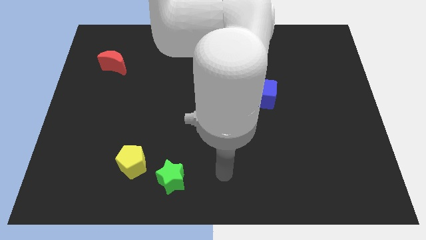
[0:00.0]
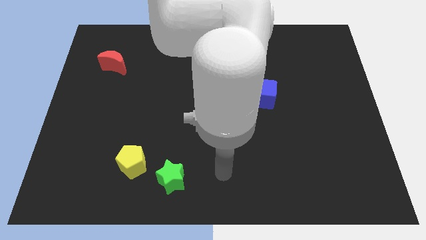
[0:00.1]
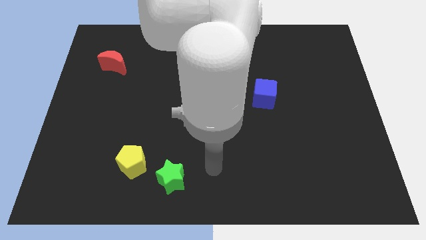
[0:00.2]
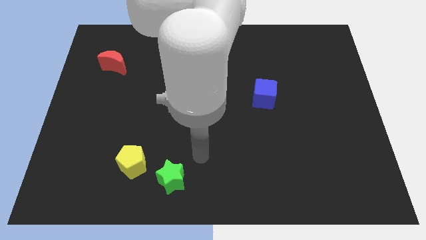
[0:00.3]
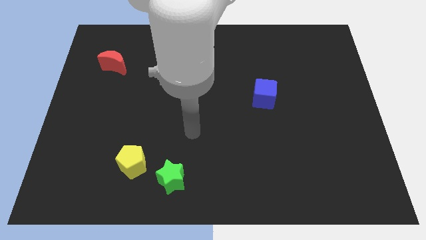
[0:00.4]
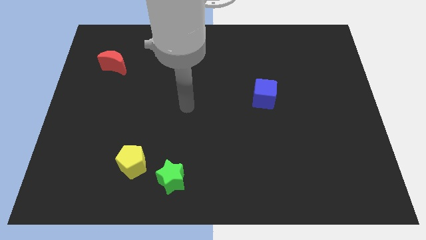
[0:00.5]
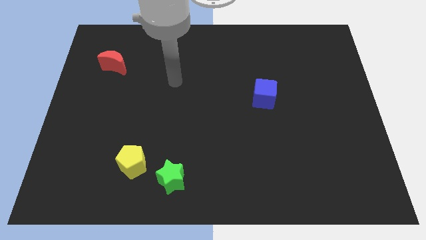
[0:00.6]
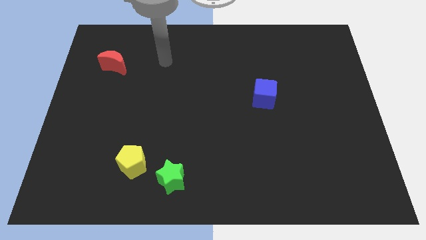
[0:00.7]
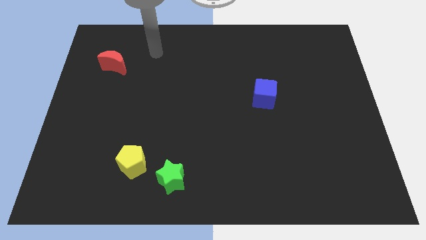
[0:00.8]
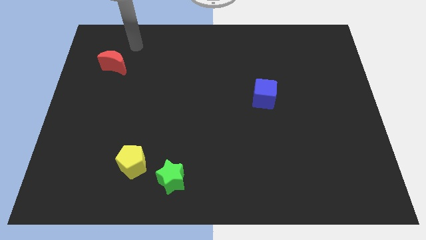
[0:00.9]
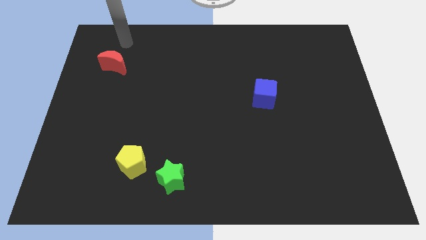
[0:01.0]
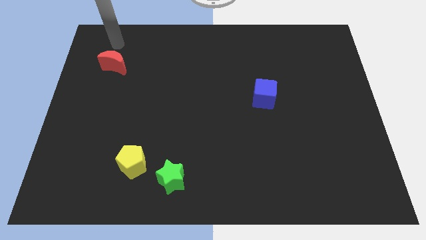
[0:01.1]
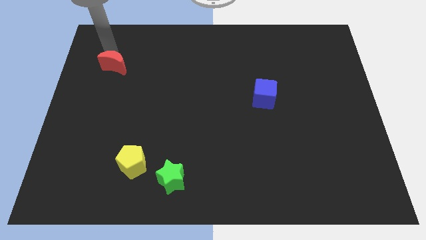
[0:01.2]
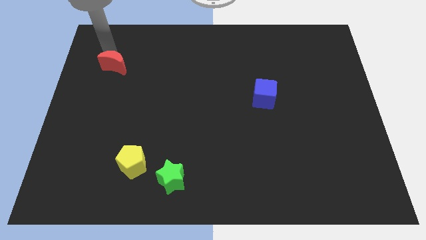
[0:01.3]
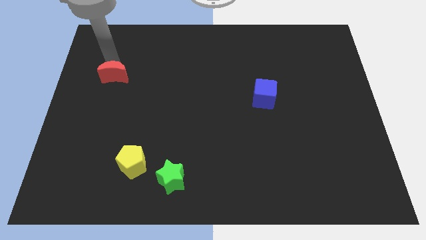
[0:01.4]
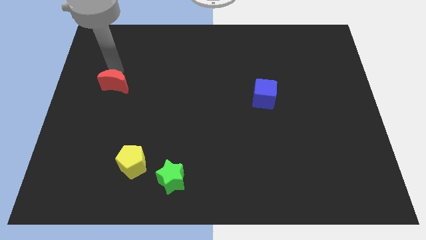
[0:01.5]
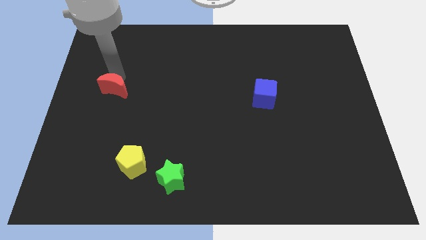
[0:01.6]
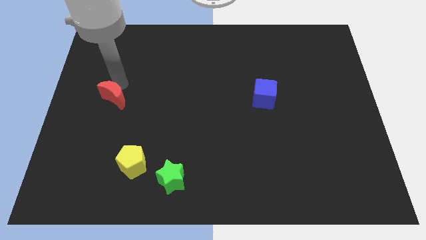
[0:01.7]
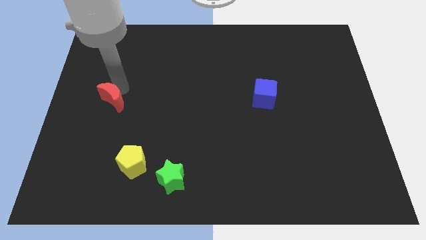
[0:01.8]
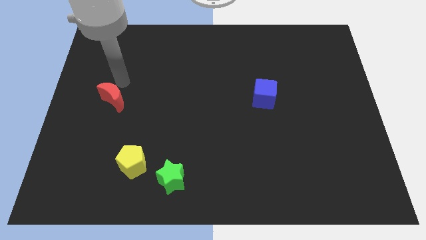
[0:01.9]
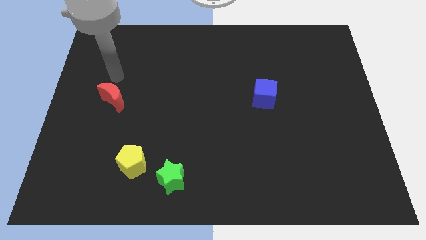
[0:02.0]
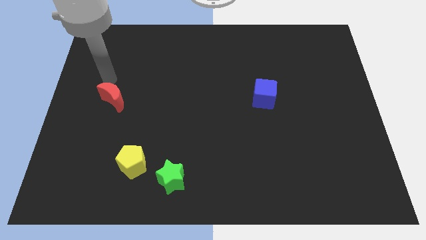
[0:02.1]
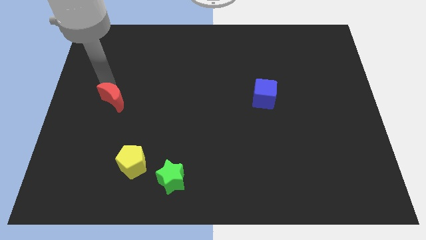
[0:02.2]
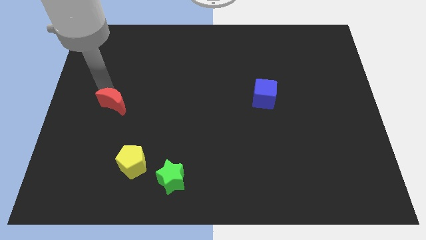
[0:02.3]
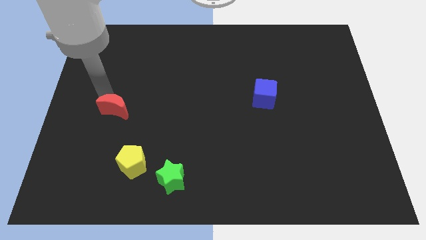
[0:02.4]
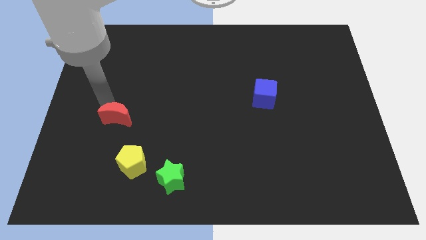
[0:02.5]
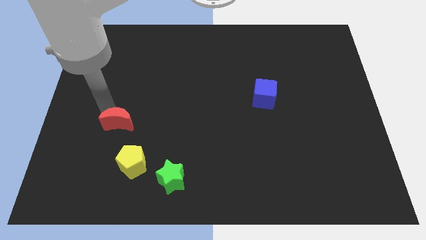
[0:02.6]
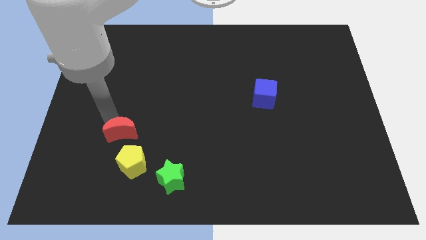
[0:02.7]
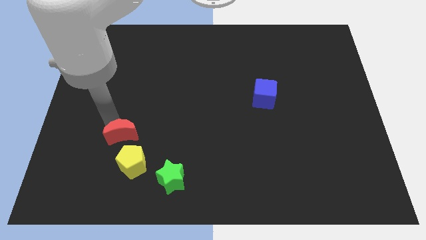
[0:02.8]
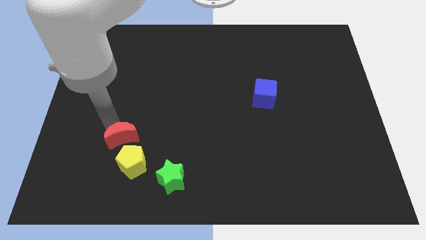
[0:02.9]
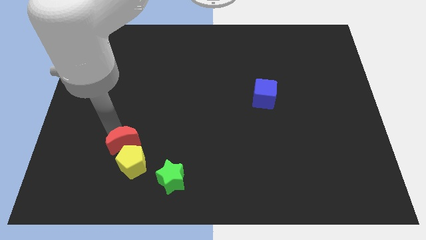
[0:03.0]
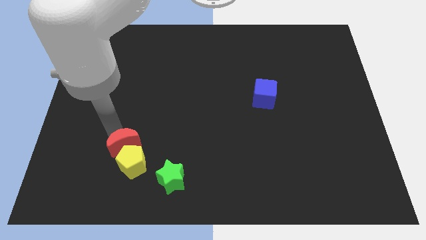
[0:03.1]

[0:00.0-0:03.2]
put the red moon to the pentagon

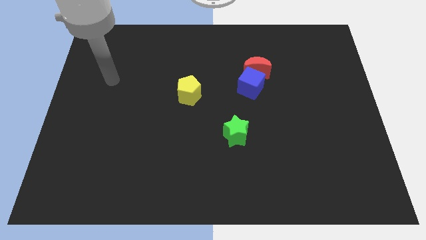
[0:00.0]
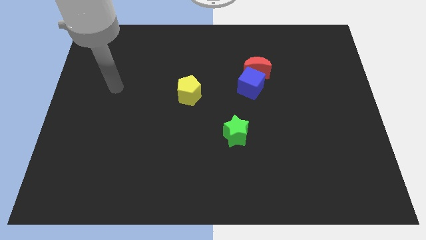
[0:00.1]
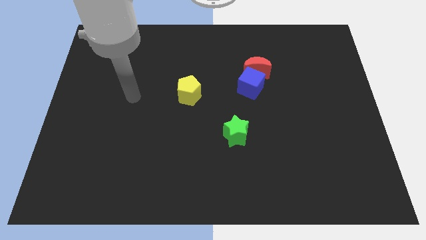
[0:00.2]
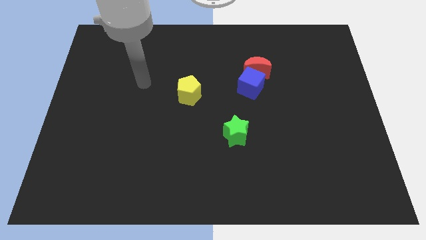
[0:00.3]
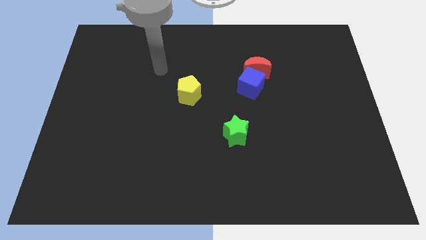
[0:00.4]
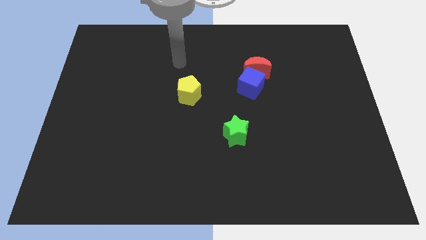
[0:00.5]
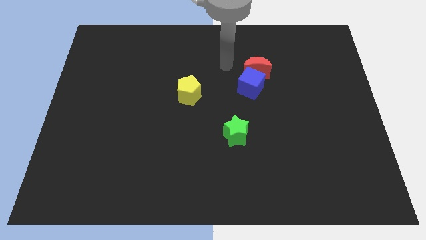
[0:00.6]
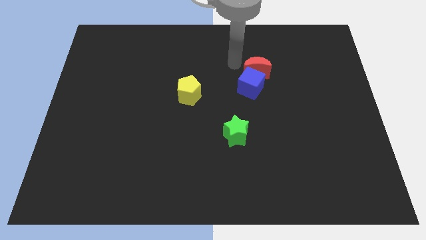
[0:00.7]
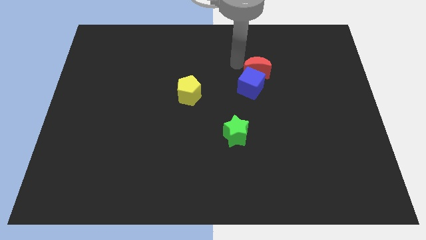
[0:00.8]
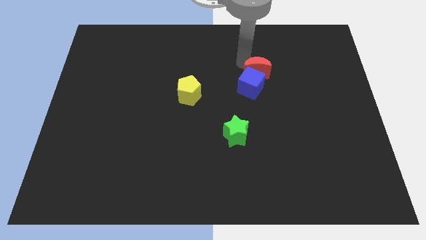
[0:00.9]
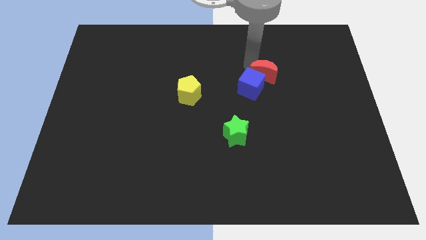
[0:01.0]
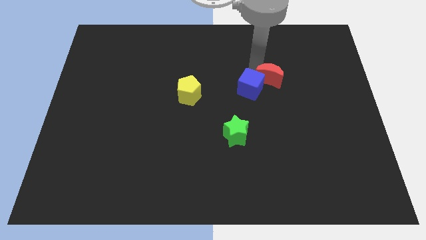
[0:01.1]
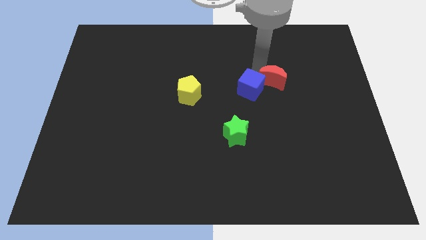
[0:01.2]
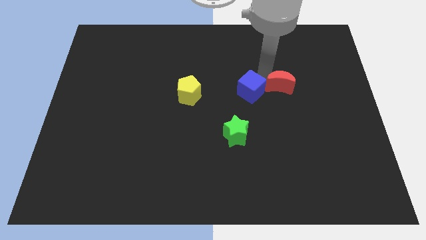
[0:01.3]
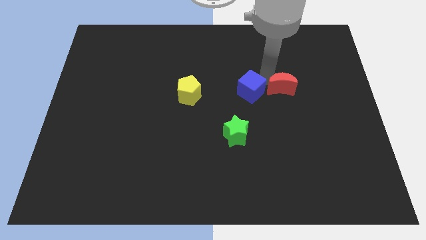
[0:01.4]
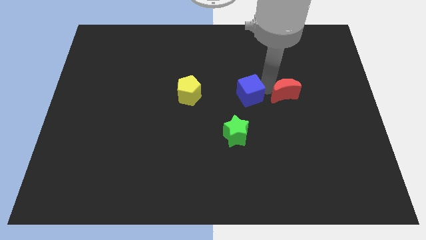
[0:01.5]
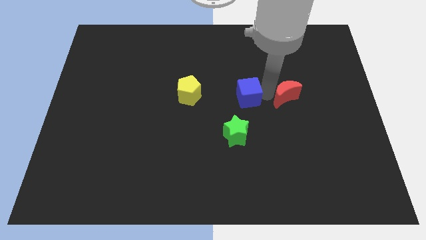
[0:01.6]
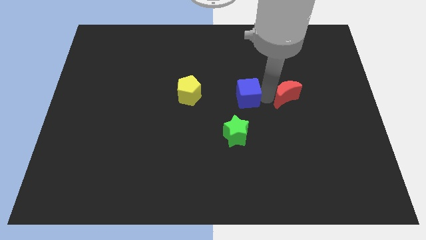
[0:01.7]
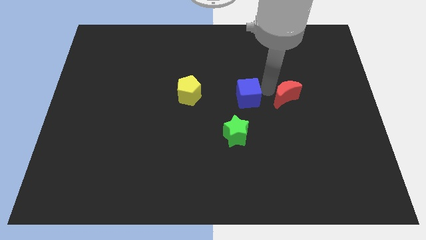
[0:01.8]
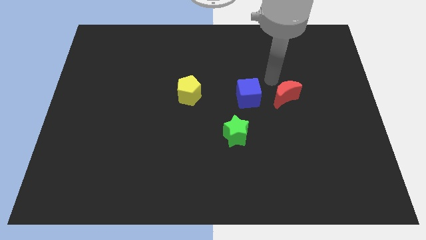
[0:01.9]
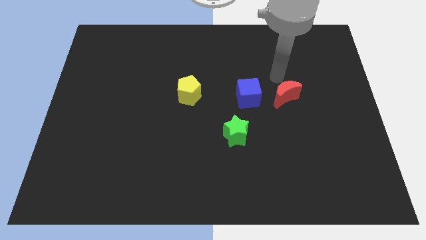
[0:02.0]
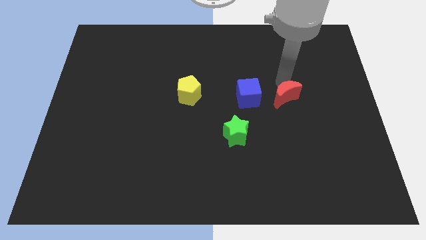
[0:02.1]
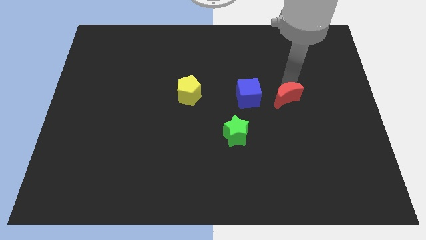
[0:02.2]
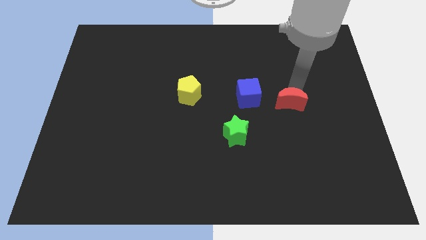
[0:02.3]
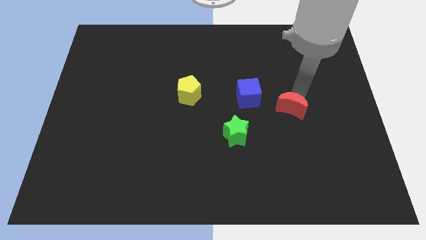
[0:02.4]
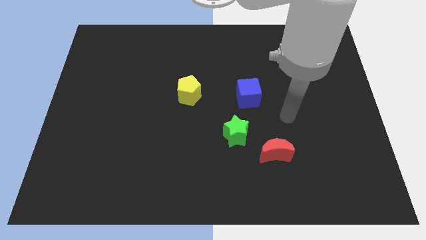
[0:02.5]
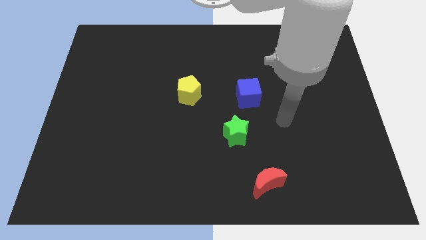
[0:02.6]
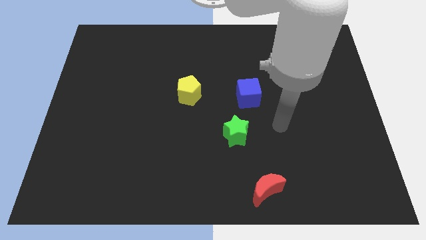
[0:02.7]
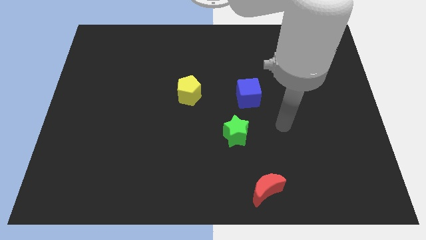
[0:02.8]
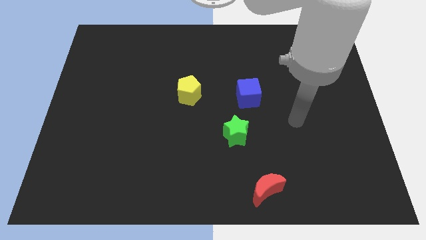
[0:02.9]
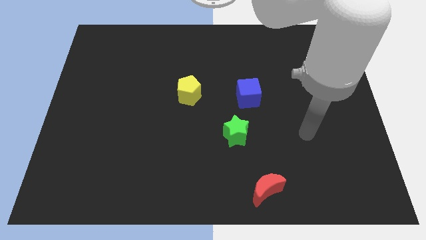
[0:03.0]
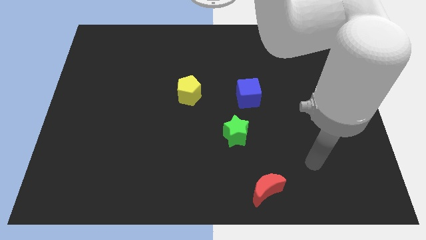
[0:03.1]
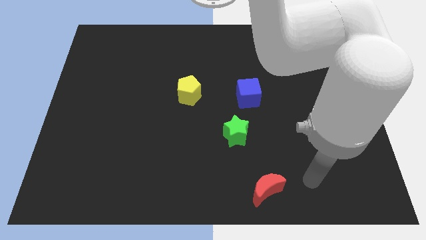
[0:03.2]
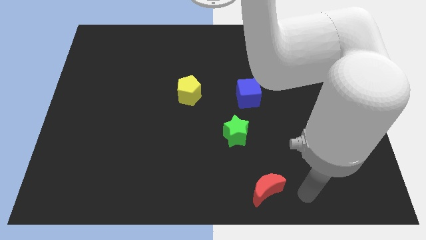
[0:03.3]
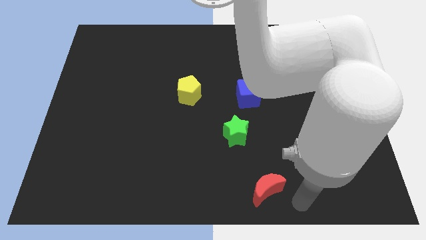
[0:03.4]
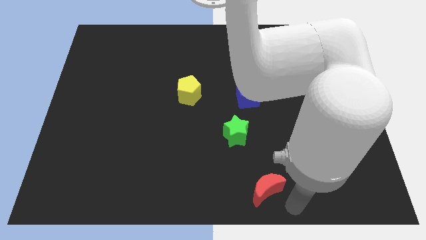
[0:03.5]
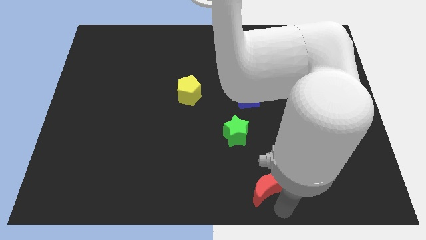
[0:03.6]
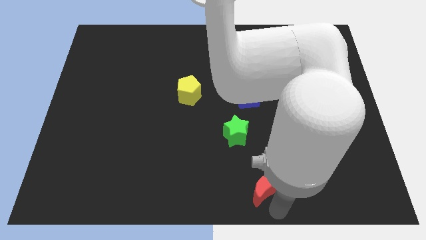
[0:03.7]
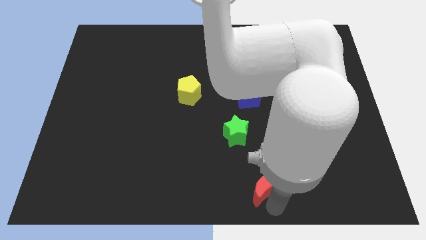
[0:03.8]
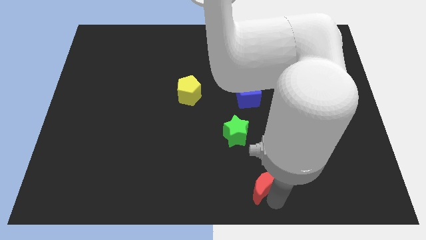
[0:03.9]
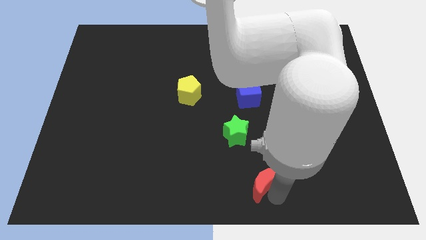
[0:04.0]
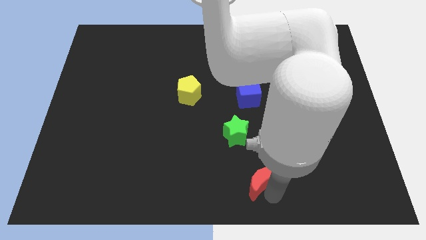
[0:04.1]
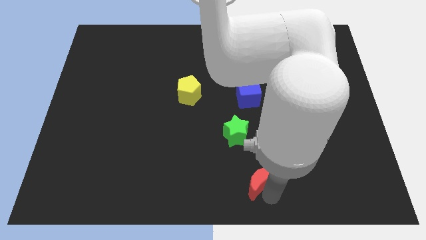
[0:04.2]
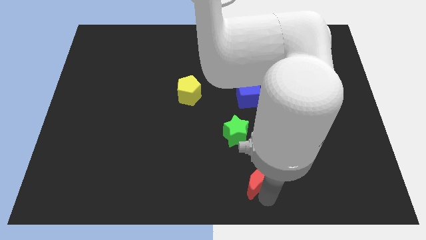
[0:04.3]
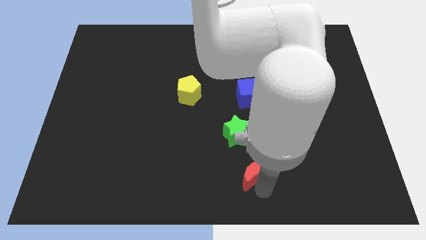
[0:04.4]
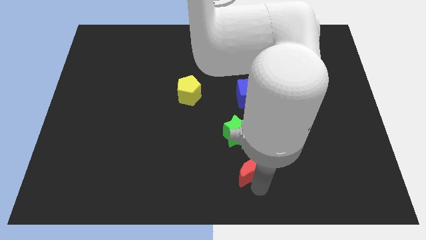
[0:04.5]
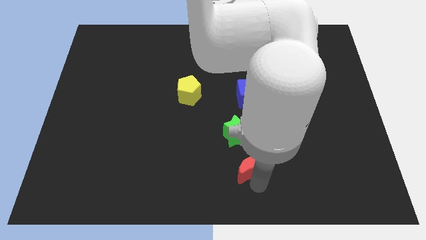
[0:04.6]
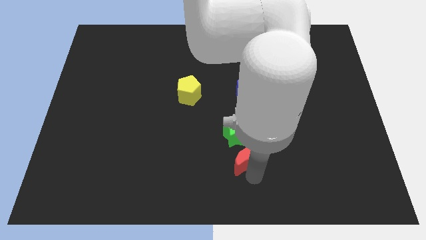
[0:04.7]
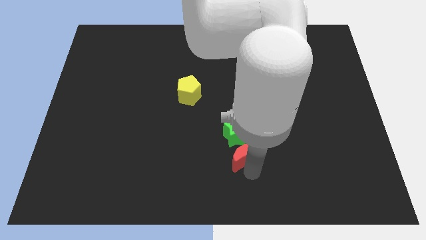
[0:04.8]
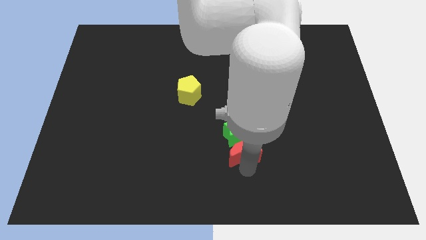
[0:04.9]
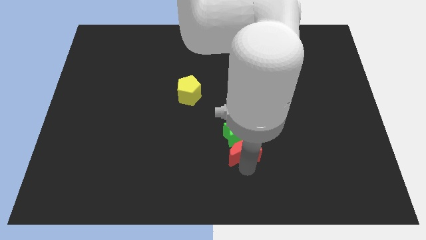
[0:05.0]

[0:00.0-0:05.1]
put the moon close to the star
